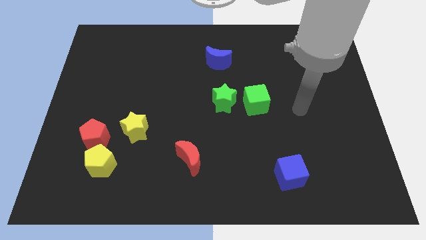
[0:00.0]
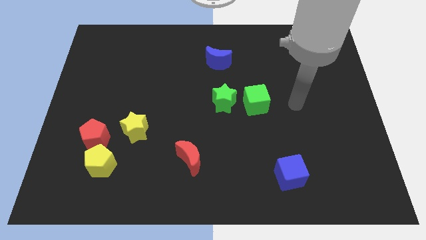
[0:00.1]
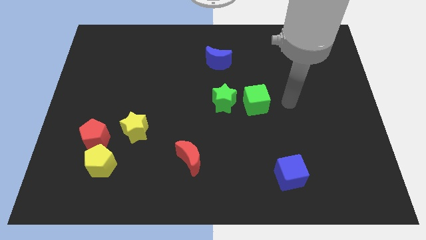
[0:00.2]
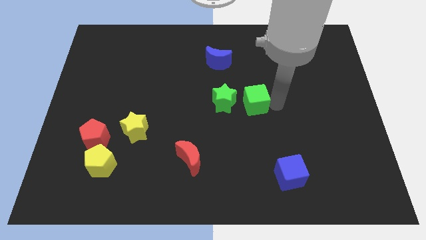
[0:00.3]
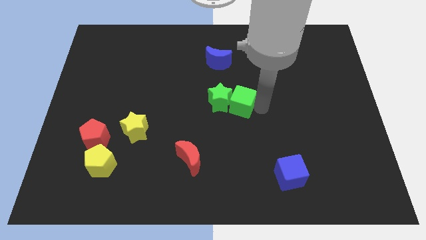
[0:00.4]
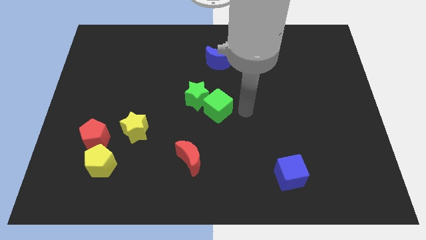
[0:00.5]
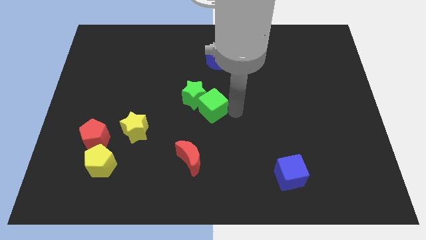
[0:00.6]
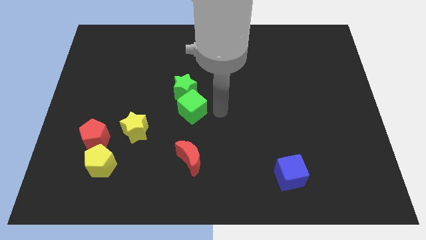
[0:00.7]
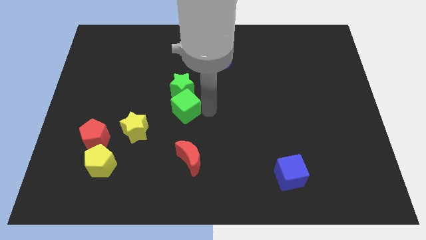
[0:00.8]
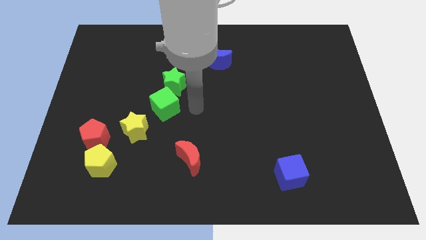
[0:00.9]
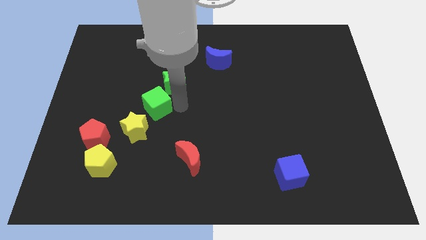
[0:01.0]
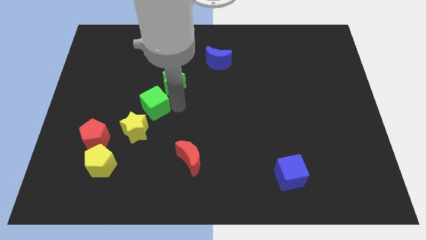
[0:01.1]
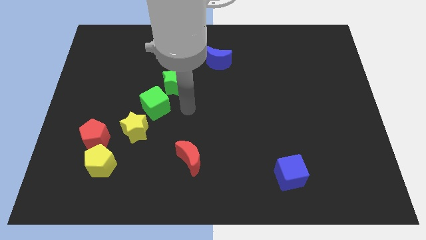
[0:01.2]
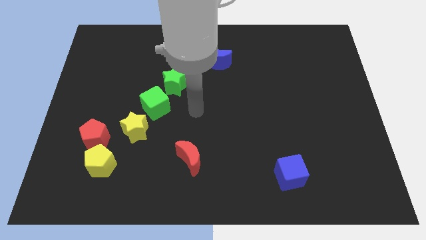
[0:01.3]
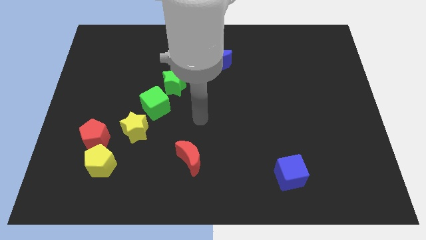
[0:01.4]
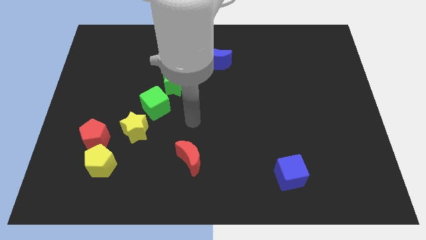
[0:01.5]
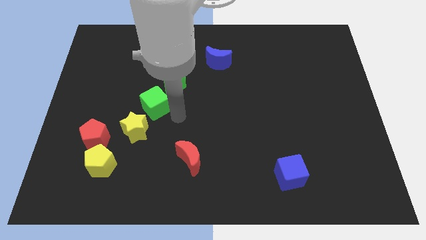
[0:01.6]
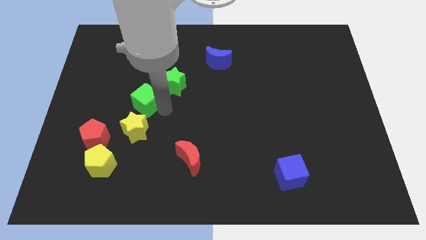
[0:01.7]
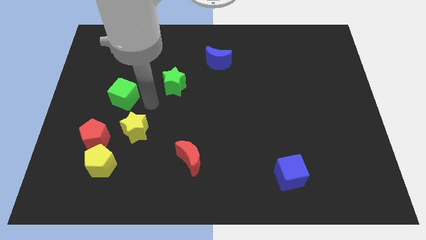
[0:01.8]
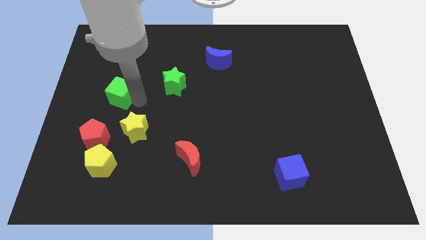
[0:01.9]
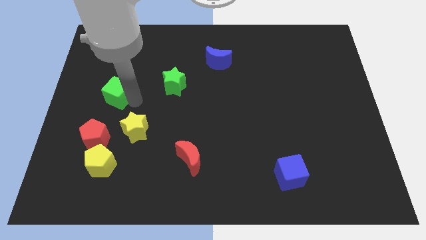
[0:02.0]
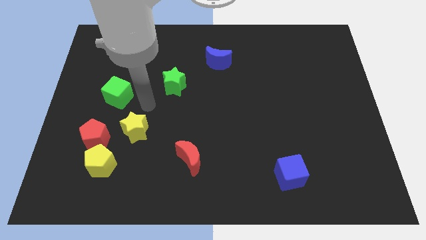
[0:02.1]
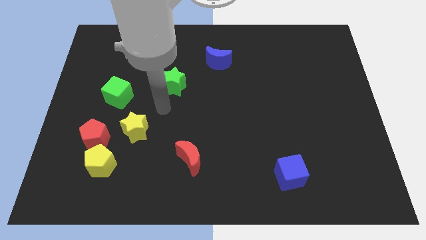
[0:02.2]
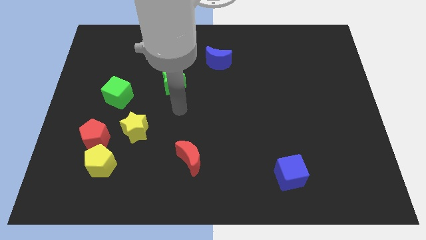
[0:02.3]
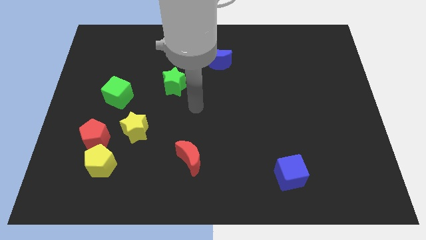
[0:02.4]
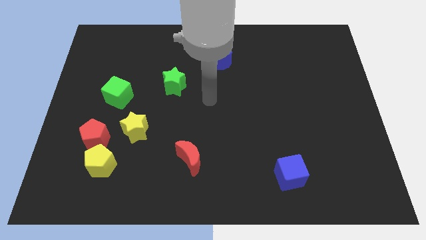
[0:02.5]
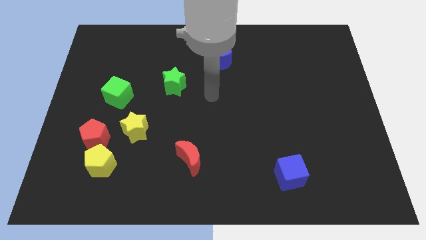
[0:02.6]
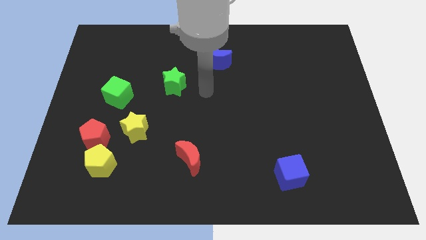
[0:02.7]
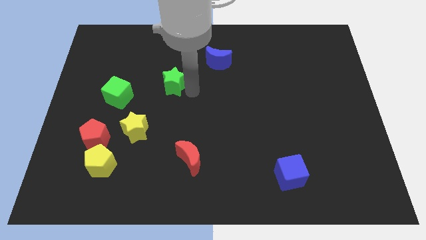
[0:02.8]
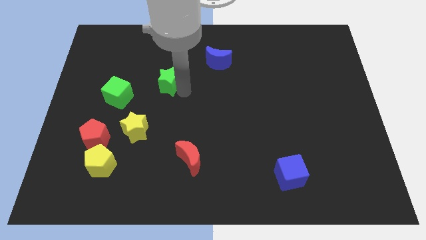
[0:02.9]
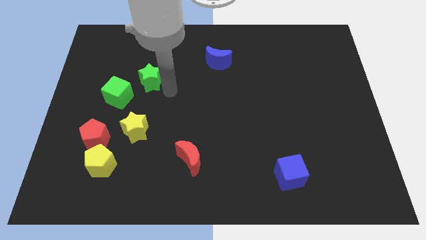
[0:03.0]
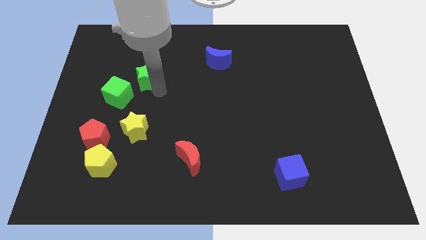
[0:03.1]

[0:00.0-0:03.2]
slide the green blocks diagonally top left to the red moon

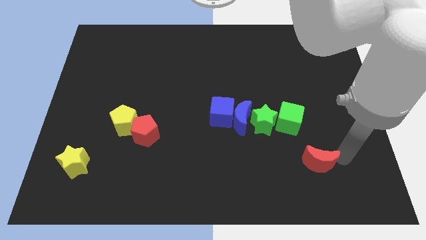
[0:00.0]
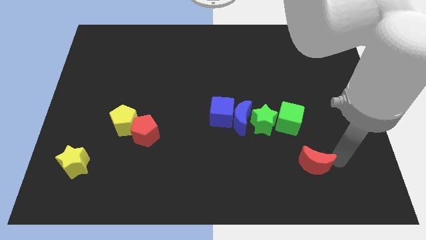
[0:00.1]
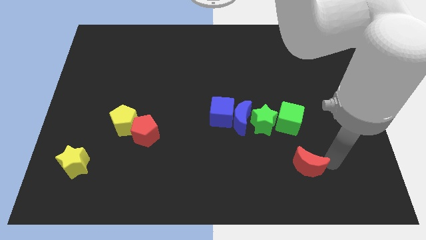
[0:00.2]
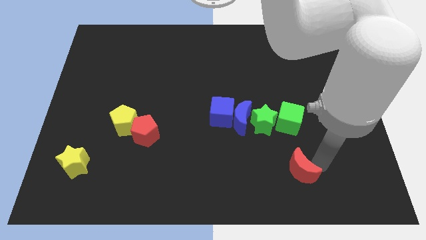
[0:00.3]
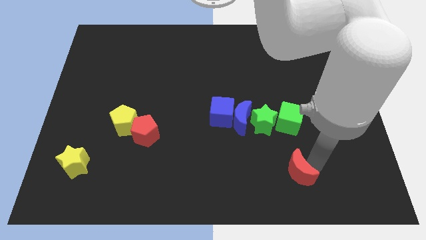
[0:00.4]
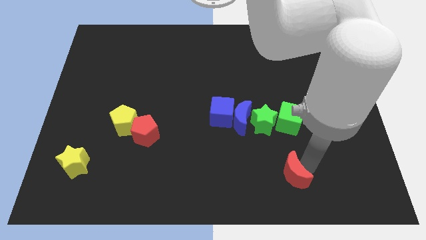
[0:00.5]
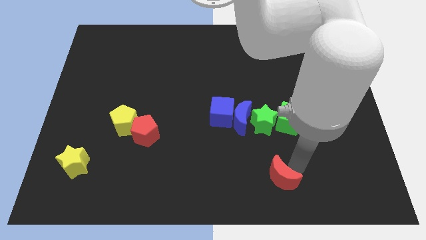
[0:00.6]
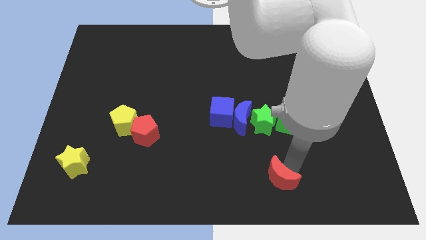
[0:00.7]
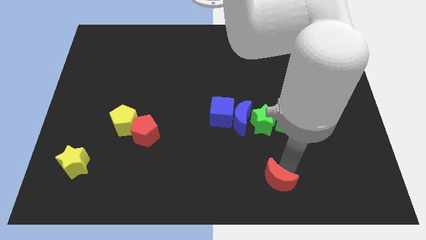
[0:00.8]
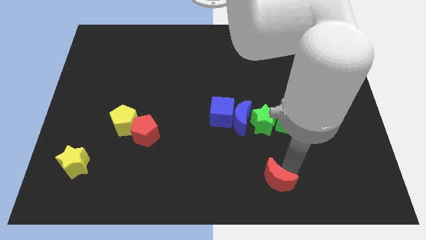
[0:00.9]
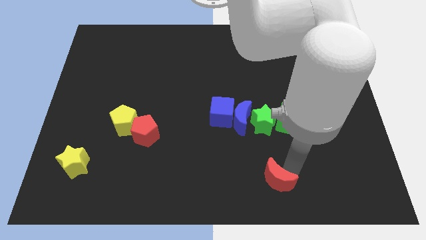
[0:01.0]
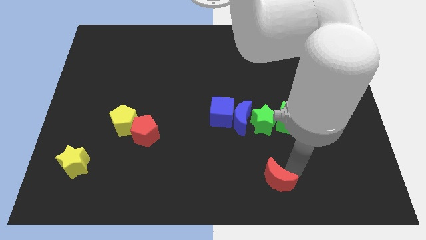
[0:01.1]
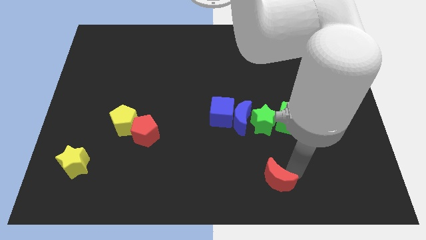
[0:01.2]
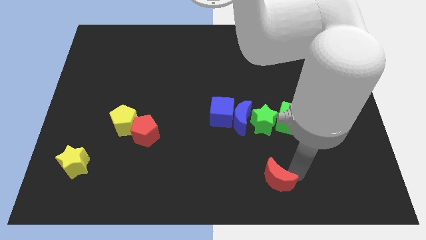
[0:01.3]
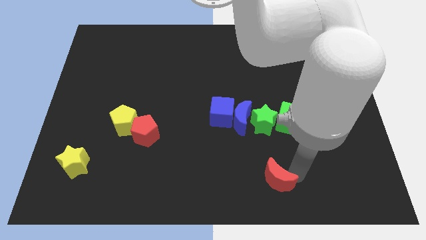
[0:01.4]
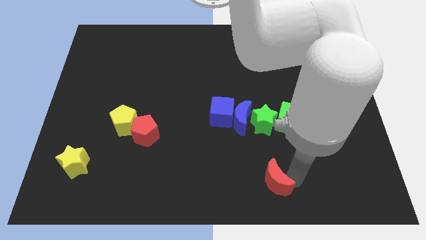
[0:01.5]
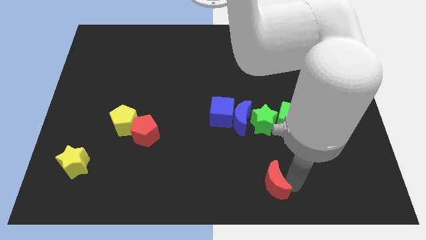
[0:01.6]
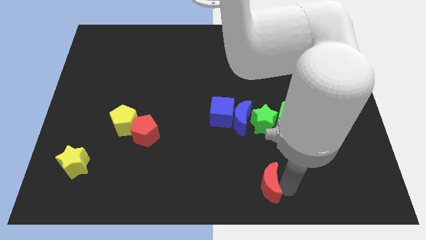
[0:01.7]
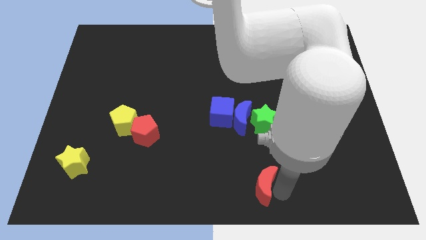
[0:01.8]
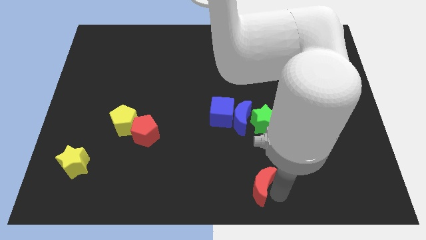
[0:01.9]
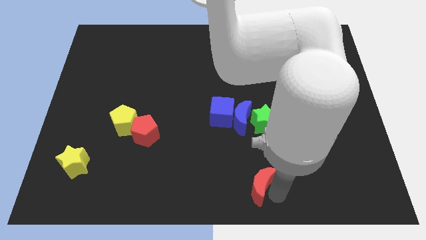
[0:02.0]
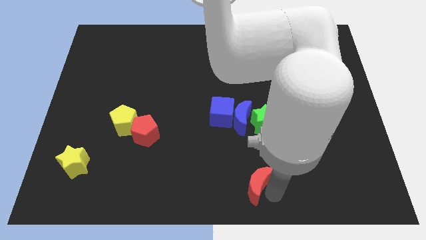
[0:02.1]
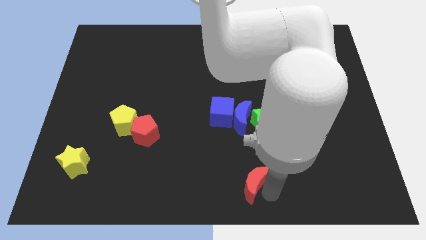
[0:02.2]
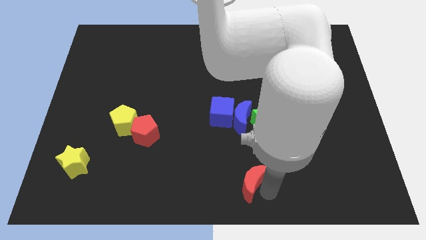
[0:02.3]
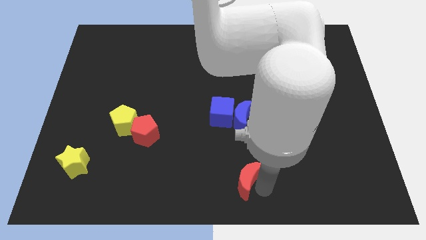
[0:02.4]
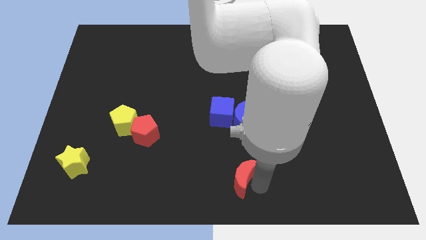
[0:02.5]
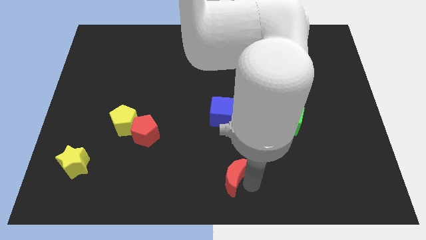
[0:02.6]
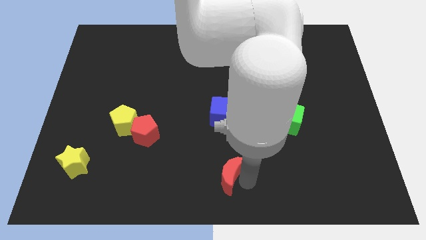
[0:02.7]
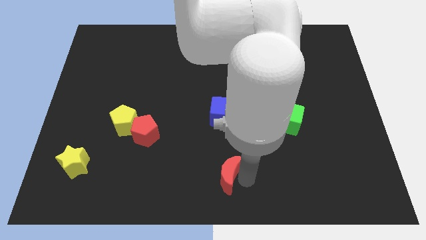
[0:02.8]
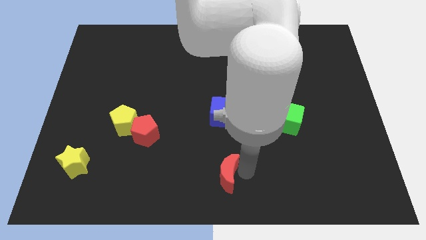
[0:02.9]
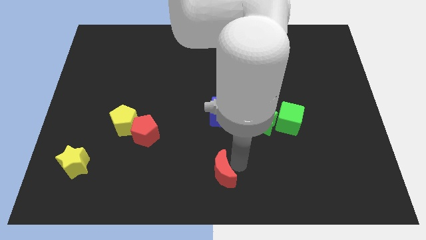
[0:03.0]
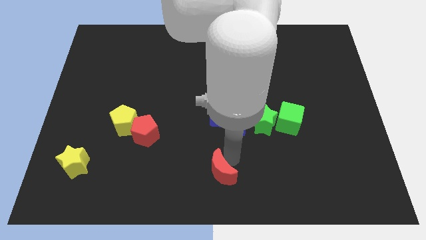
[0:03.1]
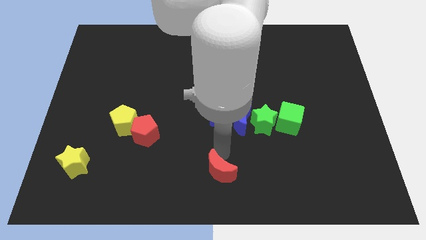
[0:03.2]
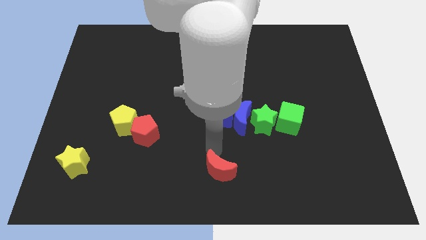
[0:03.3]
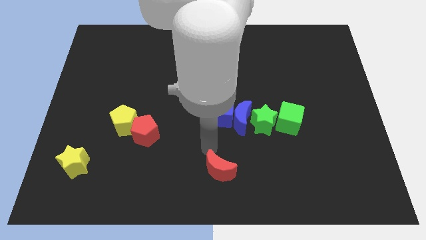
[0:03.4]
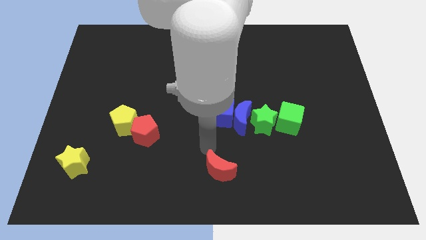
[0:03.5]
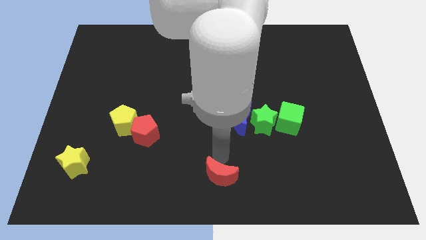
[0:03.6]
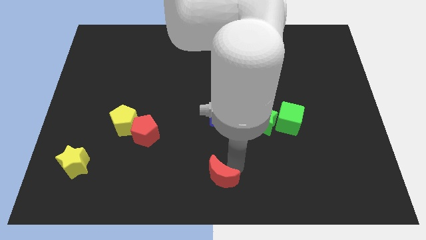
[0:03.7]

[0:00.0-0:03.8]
slide the red crescent slightly to the left

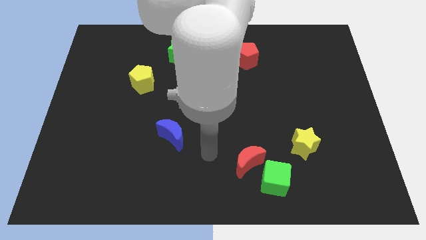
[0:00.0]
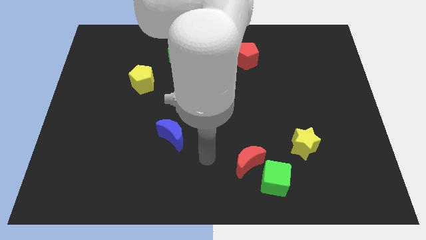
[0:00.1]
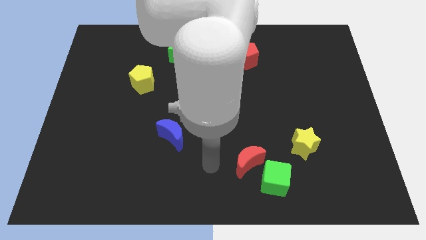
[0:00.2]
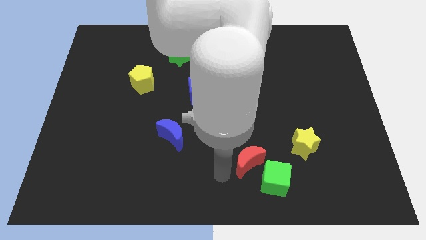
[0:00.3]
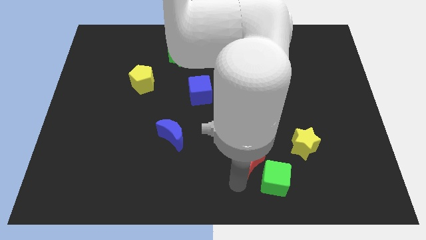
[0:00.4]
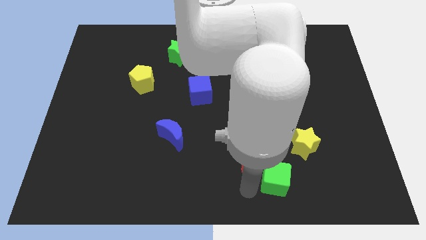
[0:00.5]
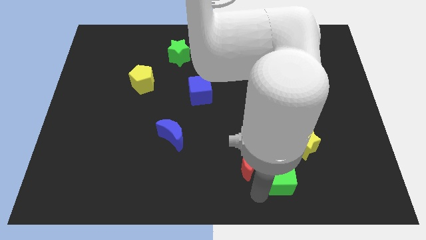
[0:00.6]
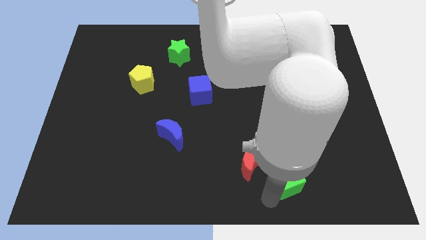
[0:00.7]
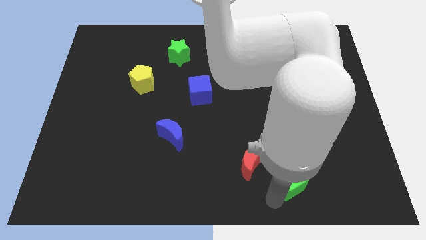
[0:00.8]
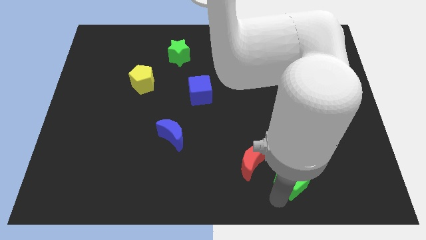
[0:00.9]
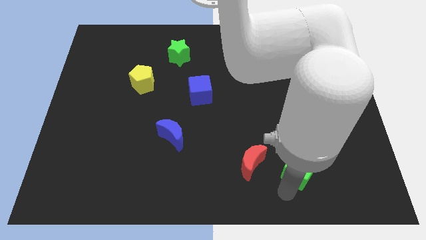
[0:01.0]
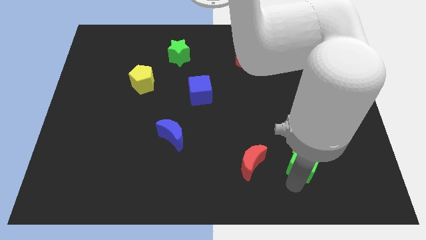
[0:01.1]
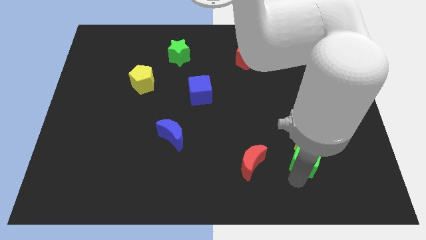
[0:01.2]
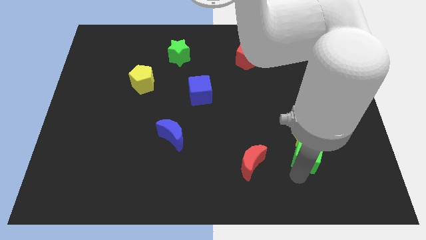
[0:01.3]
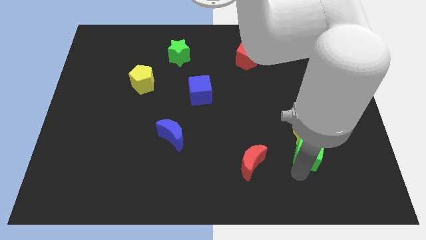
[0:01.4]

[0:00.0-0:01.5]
push the green cube into the yellow star

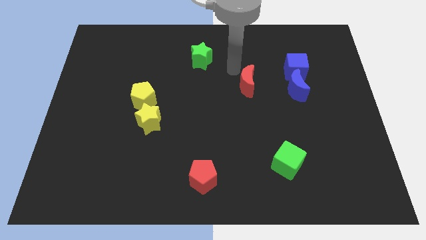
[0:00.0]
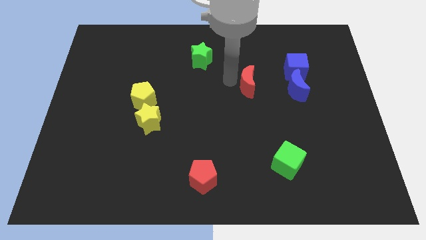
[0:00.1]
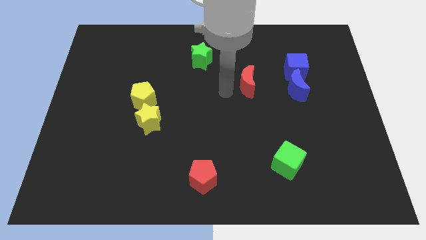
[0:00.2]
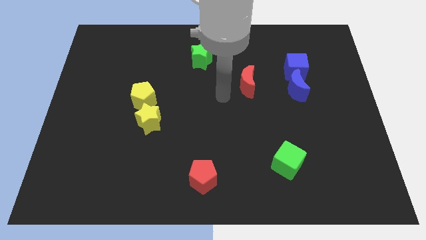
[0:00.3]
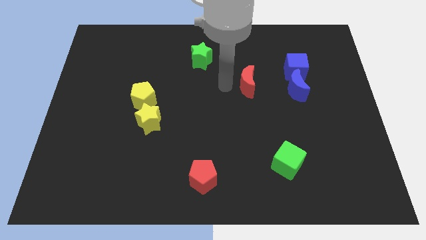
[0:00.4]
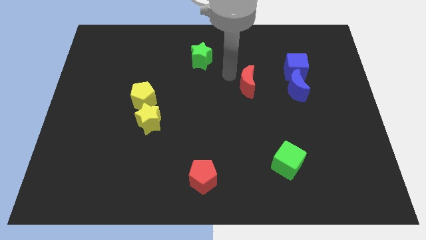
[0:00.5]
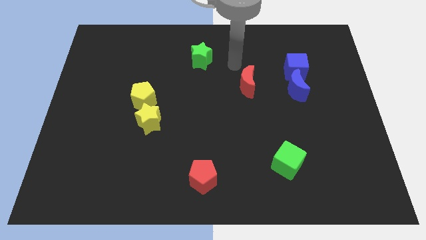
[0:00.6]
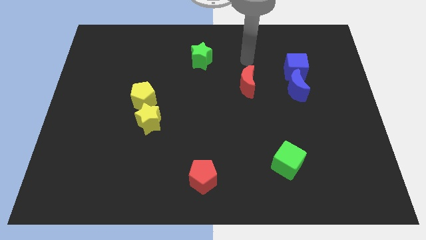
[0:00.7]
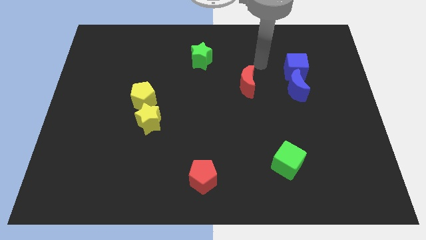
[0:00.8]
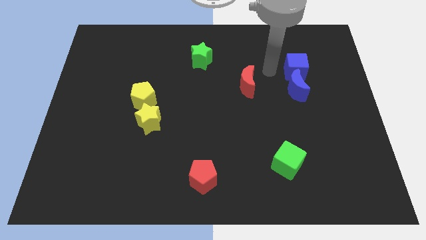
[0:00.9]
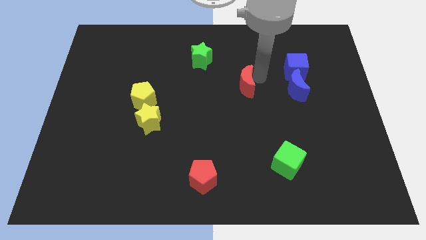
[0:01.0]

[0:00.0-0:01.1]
move the arm to the right of red moon
